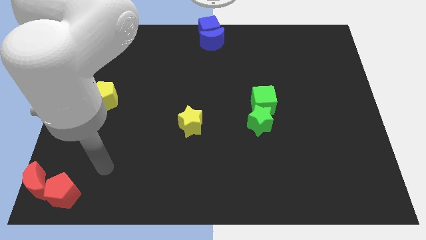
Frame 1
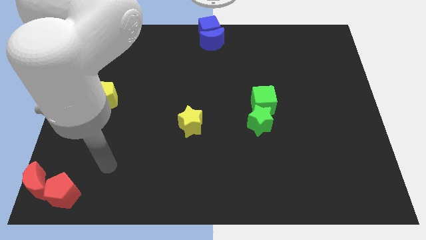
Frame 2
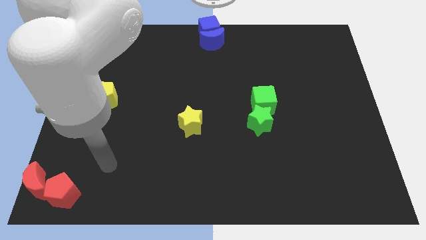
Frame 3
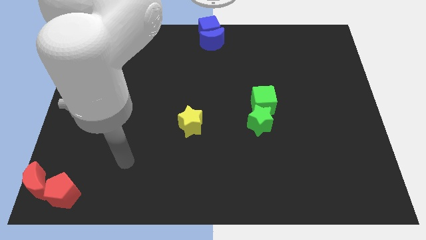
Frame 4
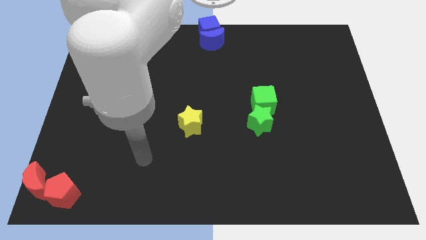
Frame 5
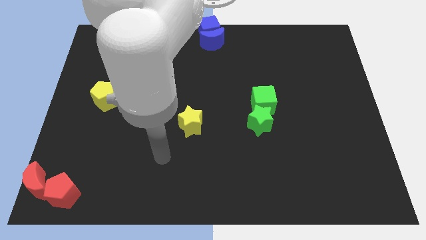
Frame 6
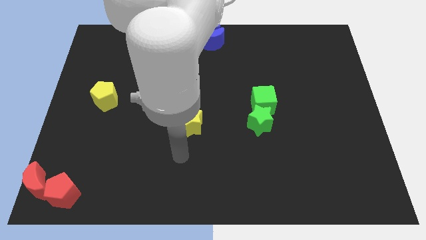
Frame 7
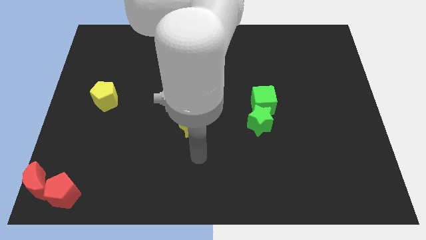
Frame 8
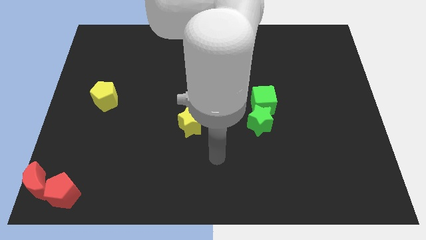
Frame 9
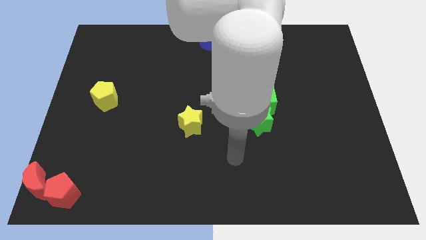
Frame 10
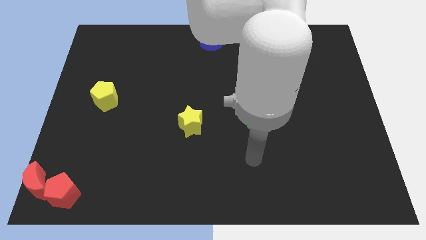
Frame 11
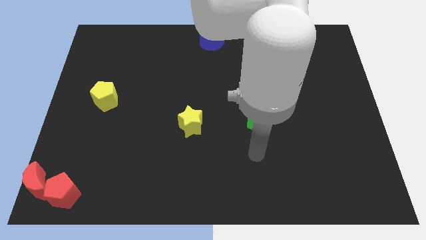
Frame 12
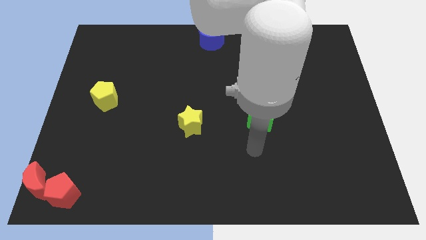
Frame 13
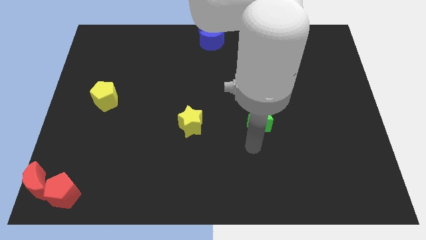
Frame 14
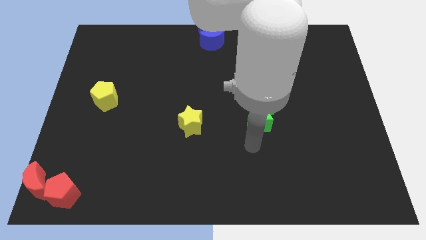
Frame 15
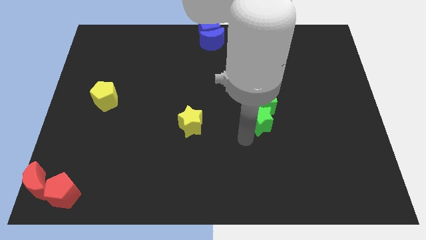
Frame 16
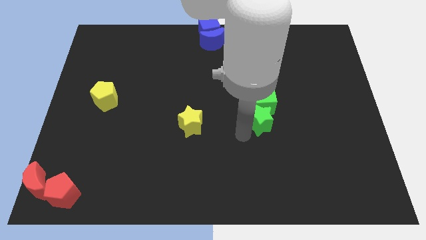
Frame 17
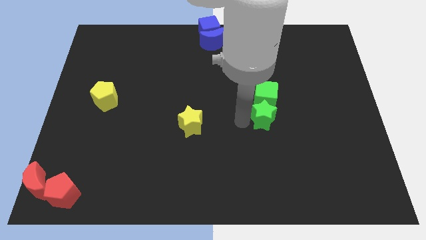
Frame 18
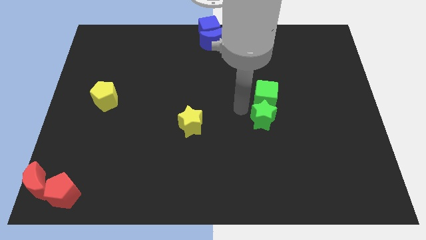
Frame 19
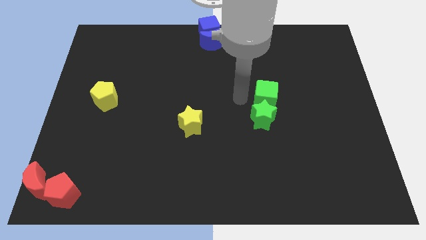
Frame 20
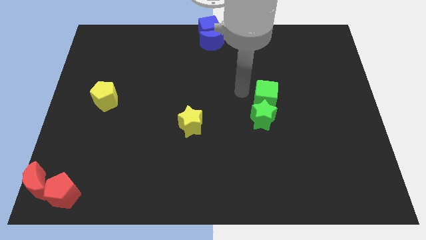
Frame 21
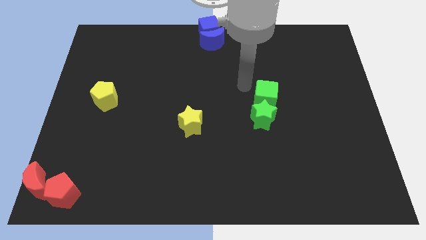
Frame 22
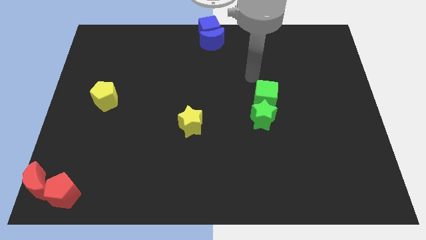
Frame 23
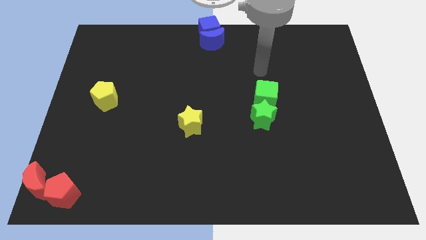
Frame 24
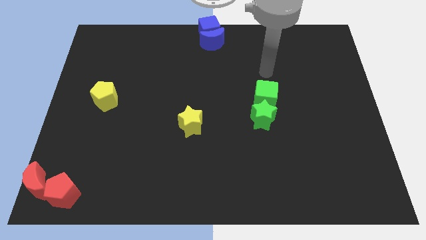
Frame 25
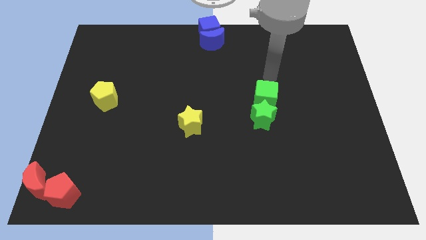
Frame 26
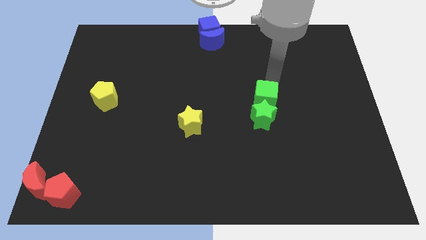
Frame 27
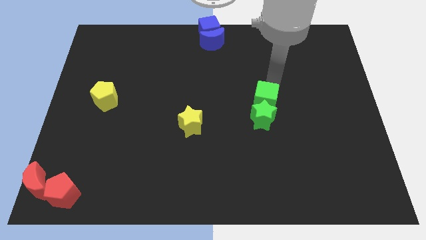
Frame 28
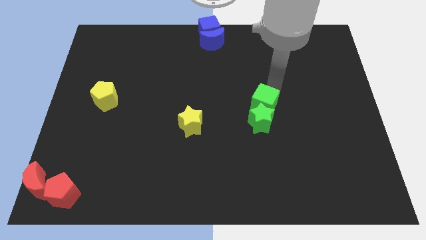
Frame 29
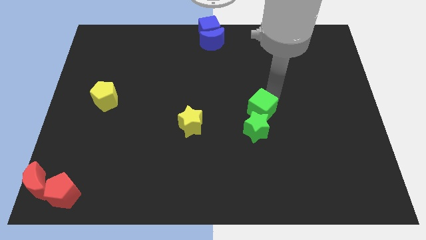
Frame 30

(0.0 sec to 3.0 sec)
move your arm and slightly push the green blocks

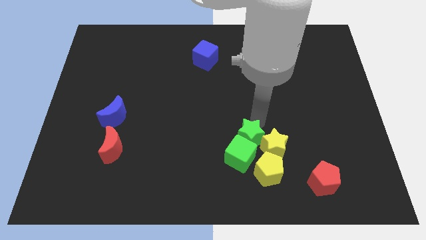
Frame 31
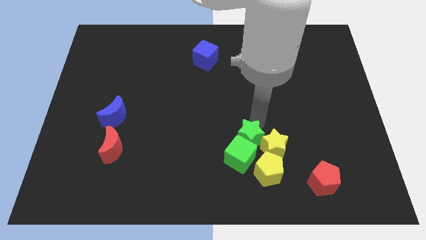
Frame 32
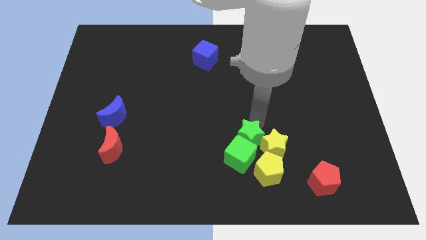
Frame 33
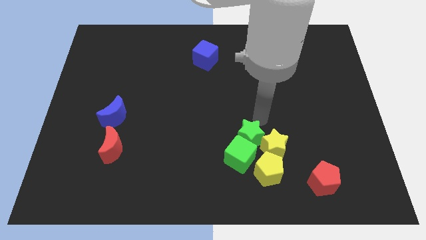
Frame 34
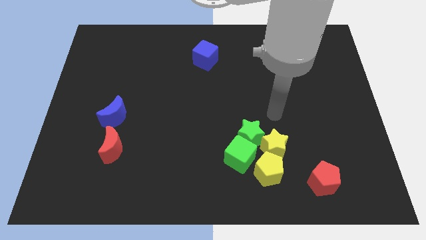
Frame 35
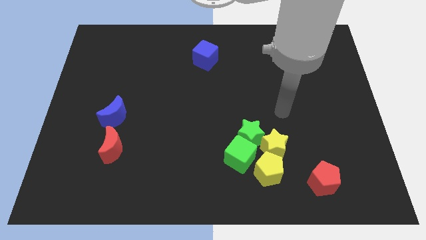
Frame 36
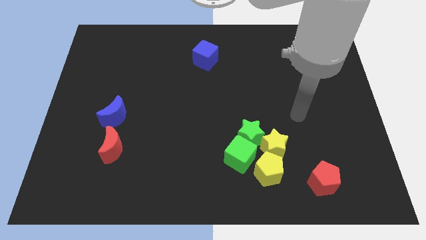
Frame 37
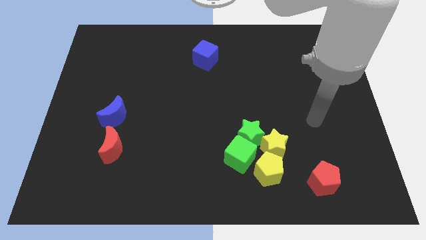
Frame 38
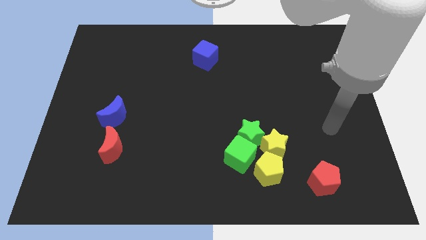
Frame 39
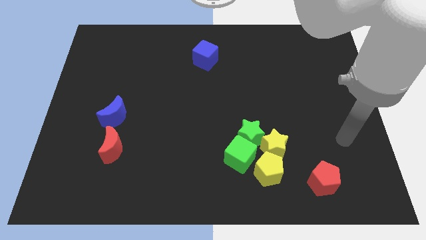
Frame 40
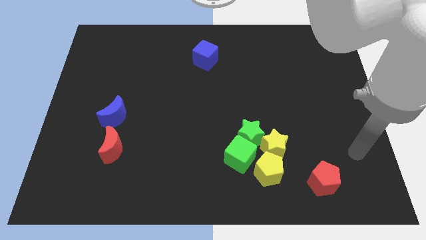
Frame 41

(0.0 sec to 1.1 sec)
move your arm away from green star

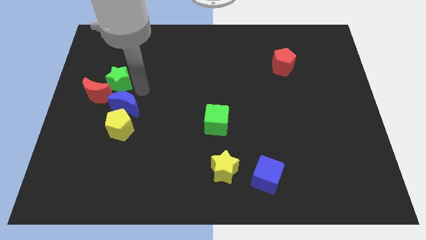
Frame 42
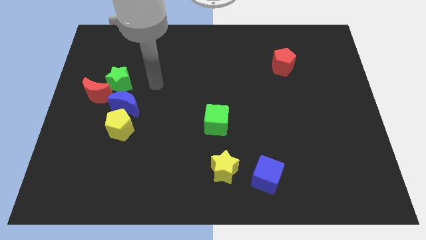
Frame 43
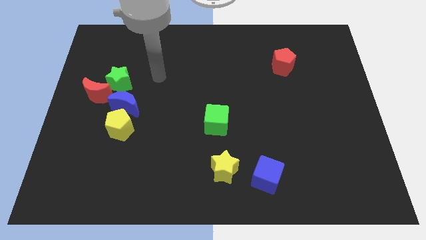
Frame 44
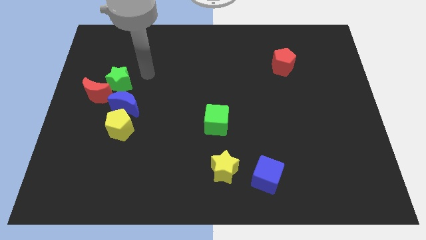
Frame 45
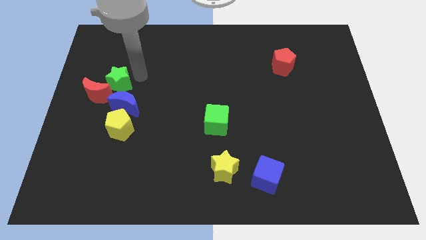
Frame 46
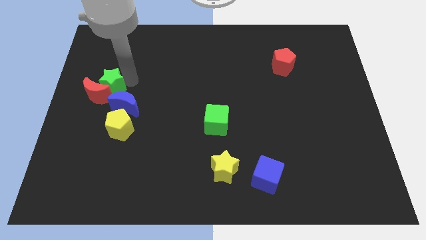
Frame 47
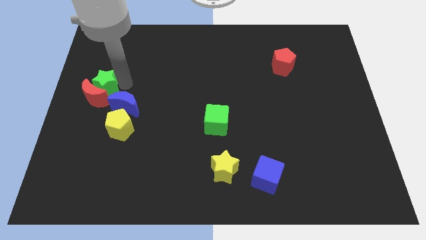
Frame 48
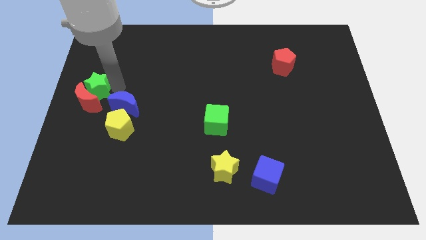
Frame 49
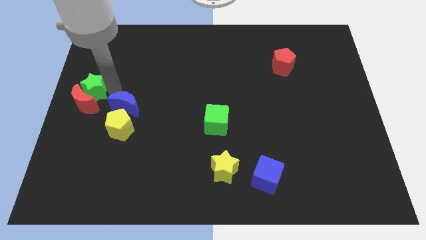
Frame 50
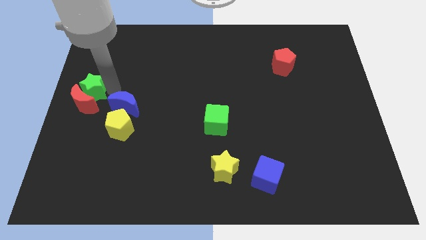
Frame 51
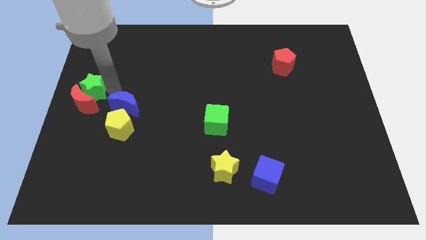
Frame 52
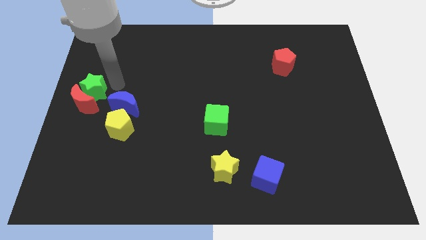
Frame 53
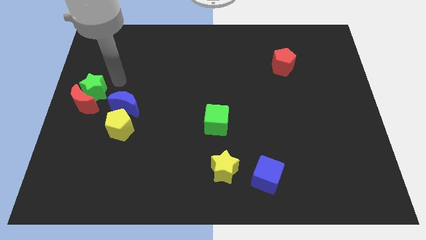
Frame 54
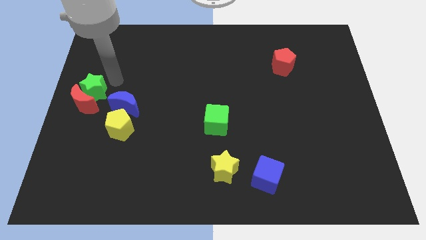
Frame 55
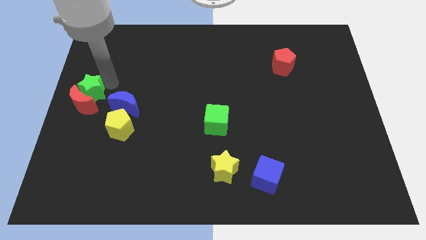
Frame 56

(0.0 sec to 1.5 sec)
push the green star and red moon to the left side of the board

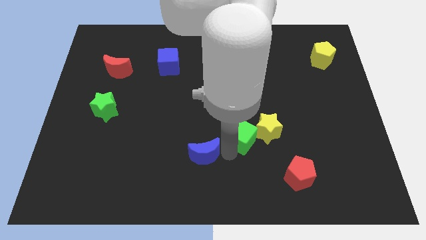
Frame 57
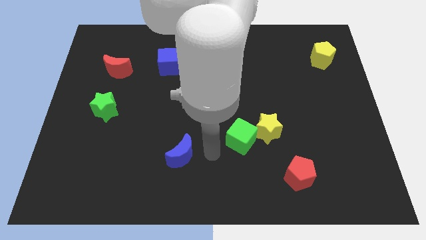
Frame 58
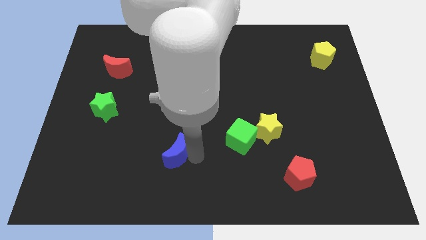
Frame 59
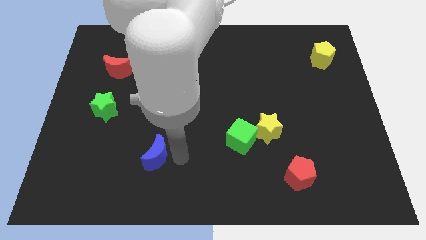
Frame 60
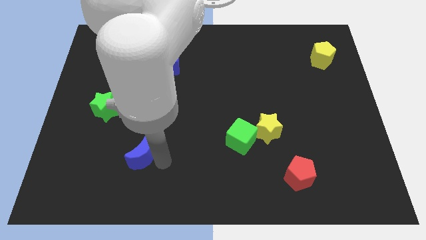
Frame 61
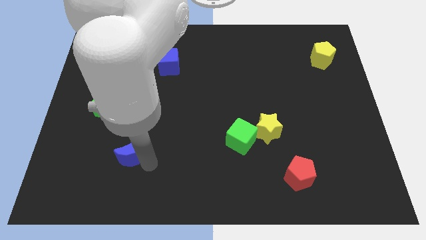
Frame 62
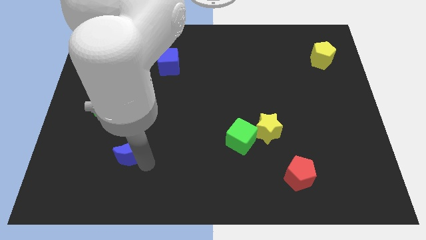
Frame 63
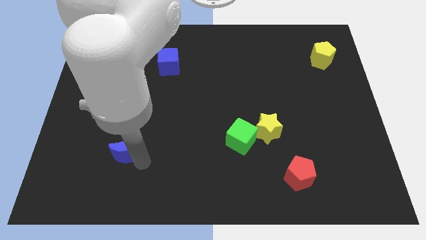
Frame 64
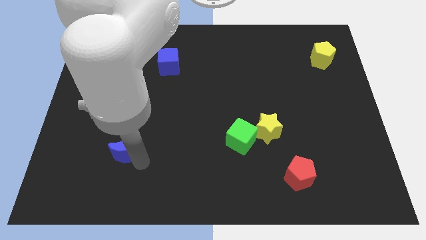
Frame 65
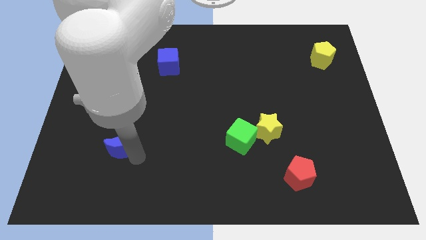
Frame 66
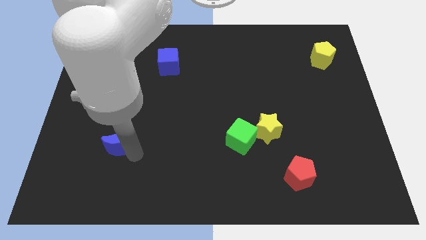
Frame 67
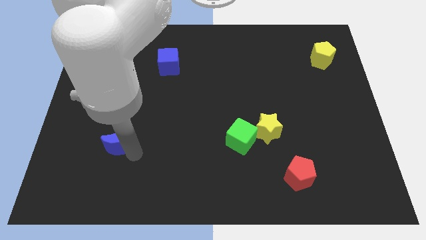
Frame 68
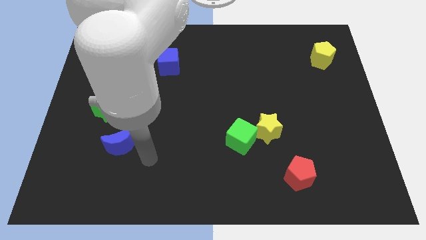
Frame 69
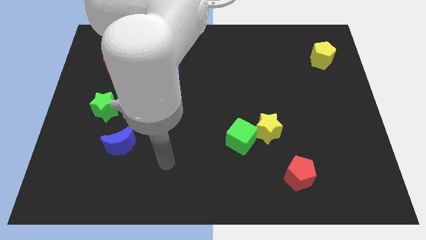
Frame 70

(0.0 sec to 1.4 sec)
push the blue crescent towards the green star

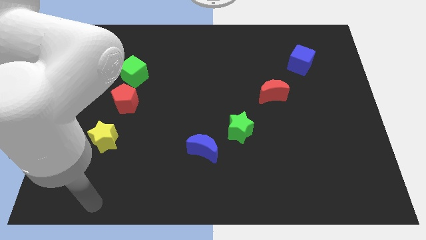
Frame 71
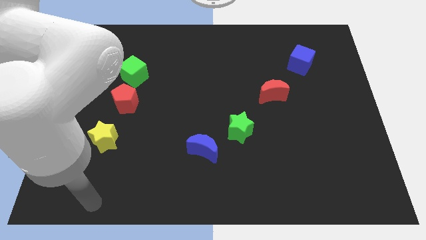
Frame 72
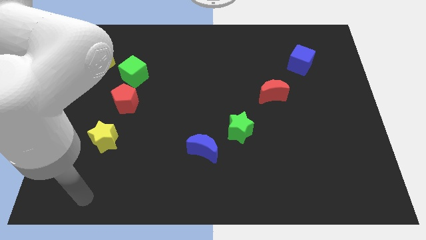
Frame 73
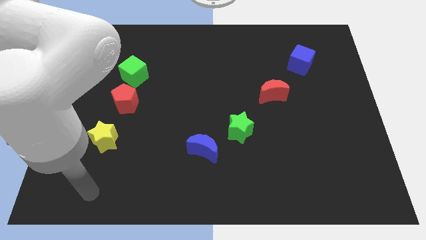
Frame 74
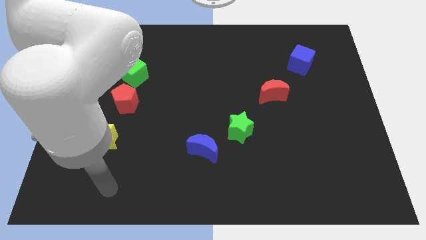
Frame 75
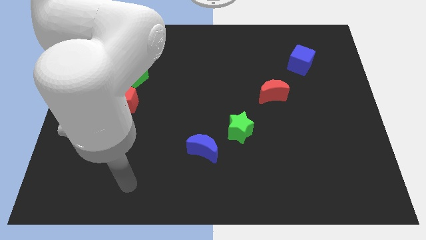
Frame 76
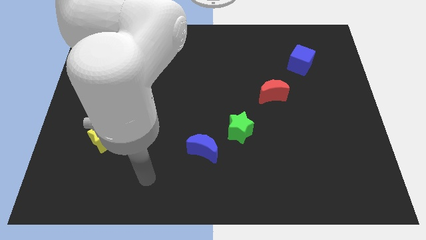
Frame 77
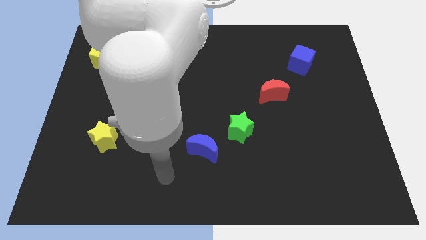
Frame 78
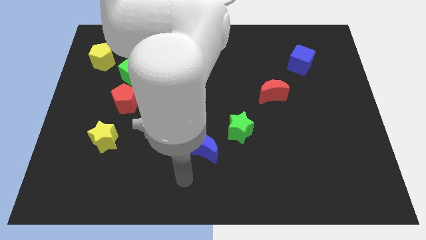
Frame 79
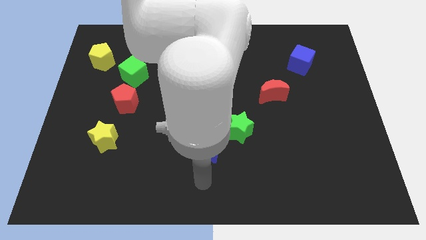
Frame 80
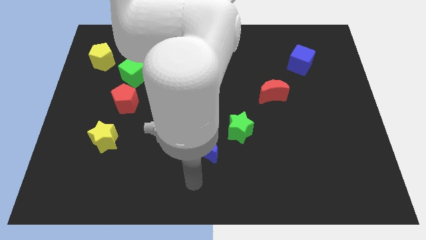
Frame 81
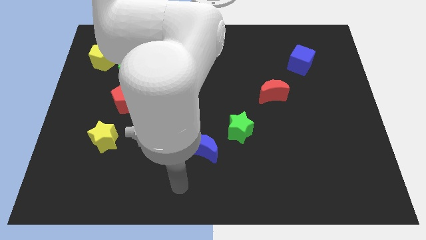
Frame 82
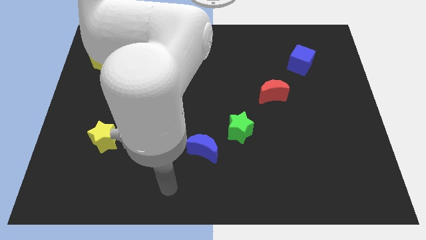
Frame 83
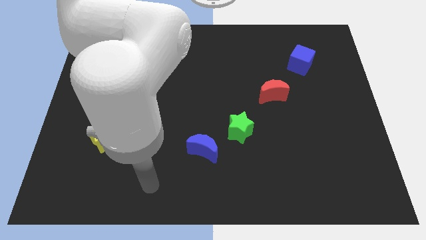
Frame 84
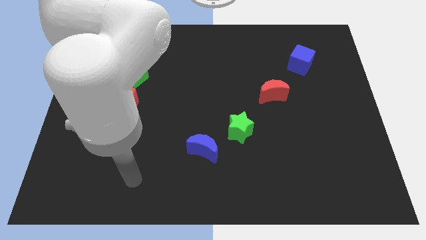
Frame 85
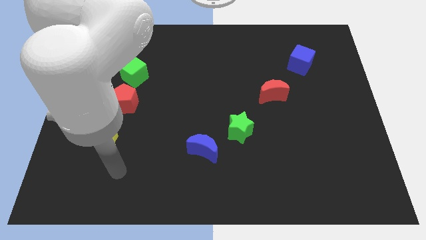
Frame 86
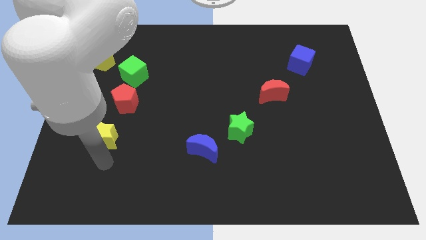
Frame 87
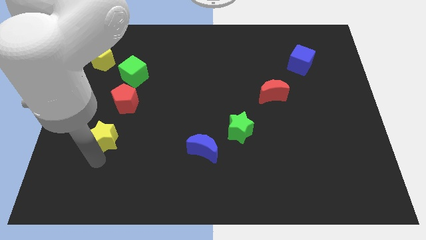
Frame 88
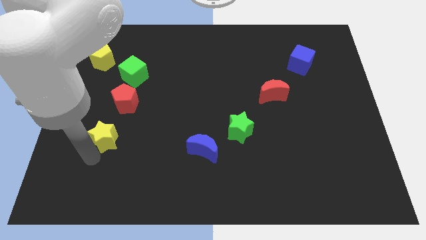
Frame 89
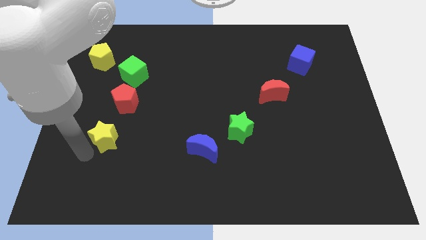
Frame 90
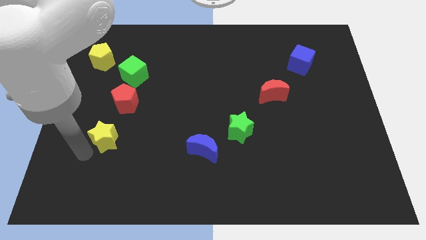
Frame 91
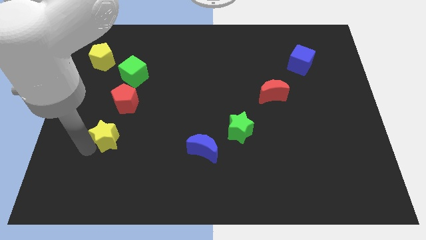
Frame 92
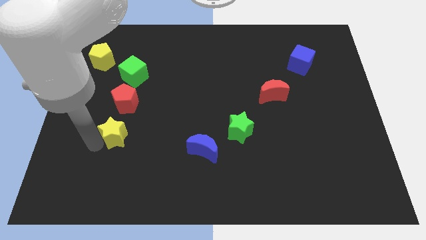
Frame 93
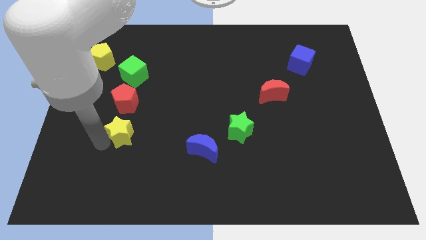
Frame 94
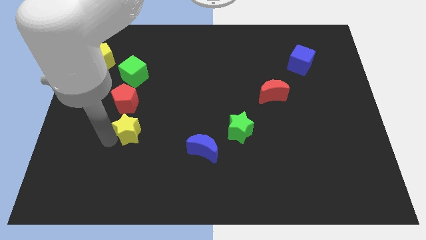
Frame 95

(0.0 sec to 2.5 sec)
push yellow star below red pentagon
